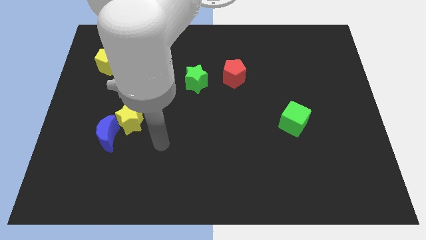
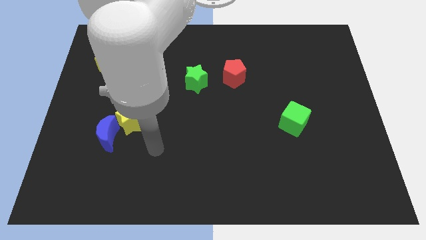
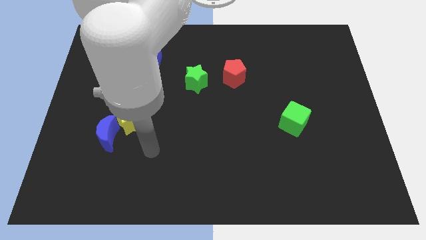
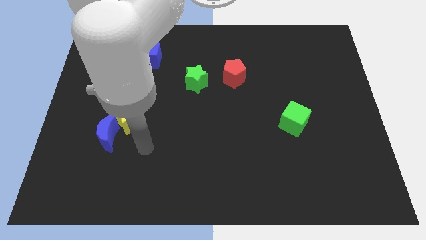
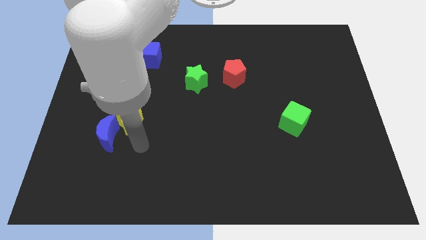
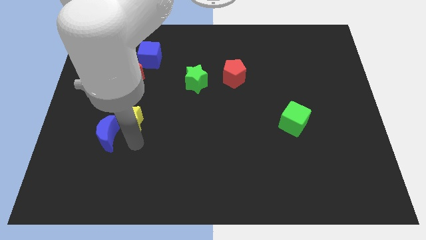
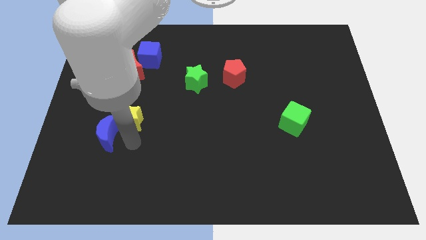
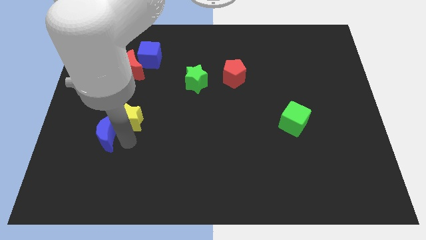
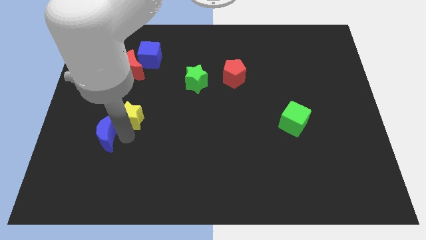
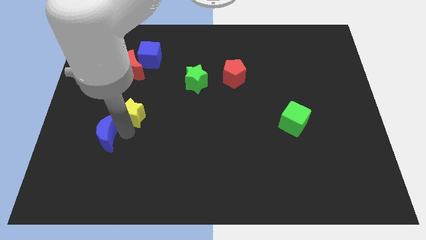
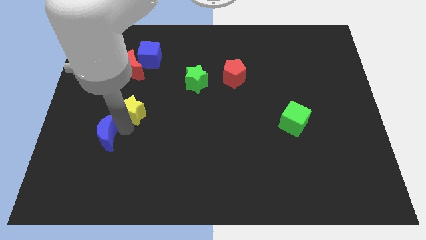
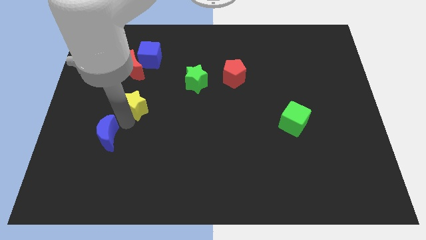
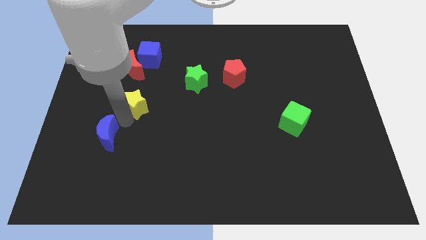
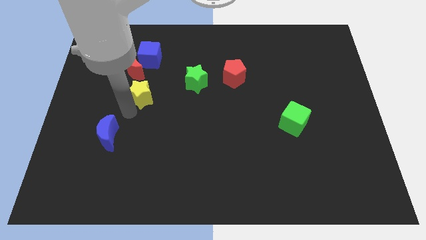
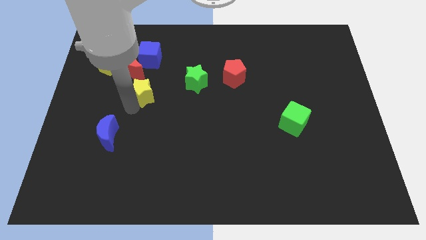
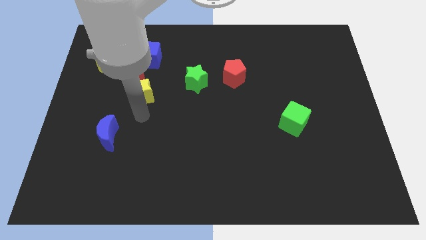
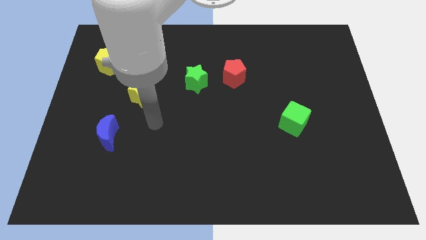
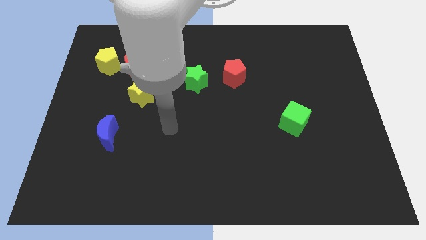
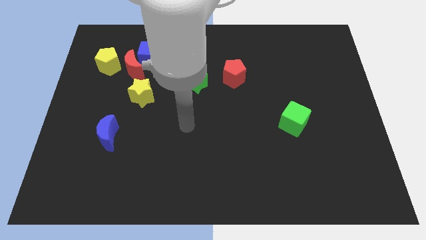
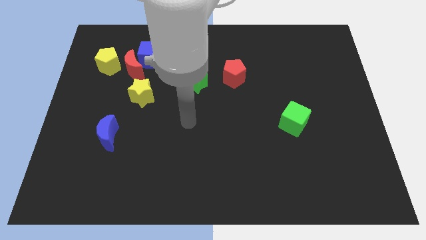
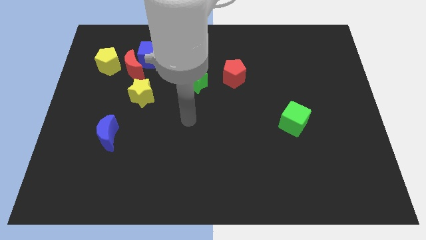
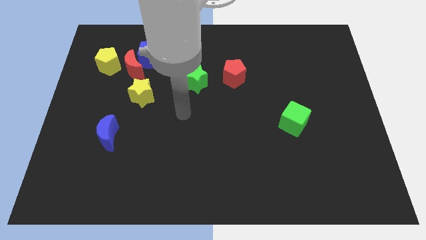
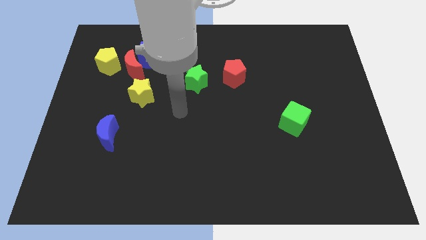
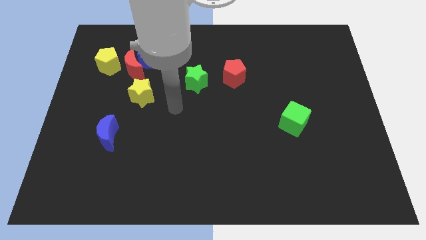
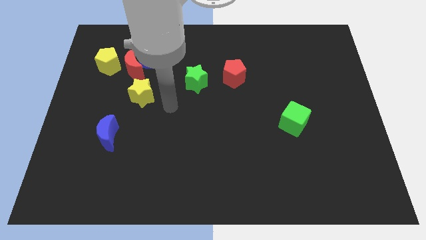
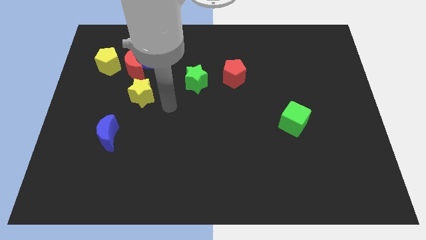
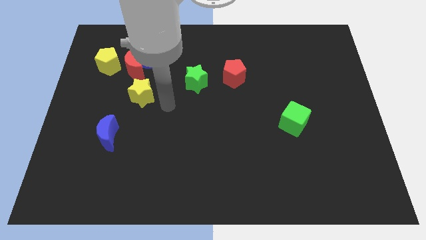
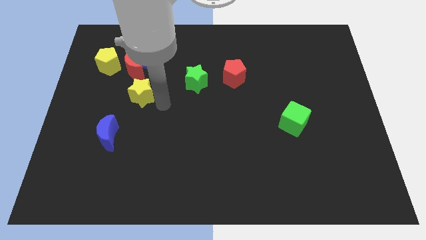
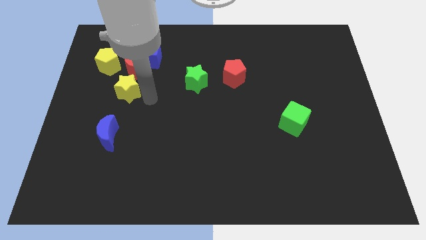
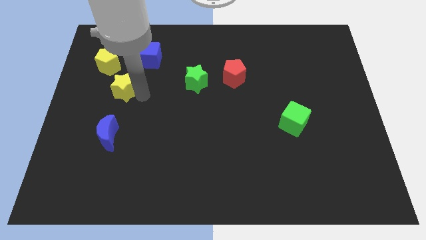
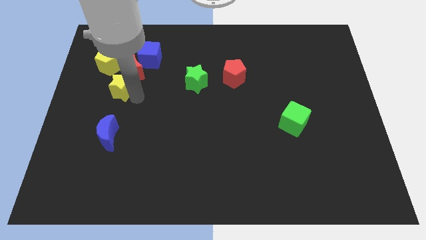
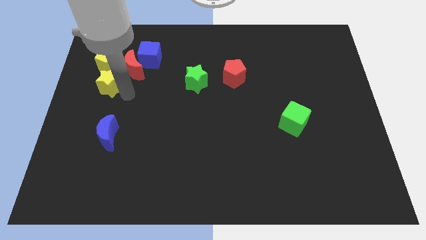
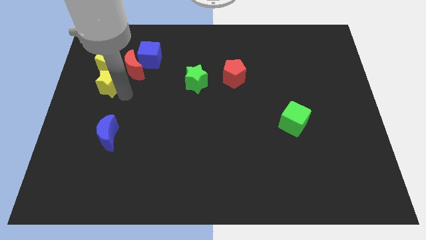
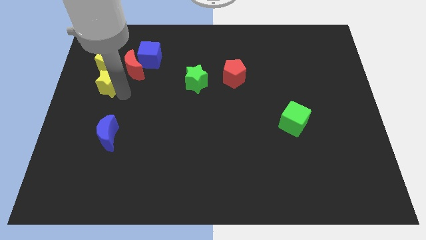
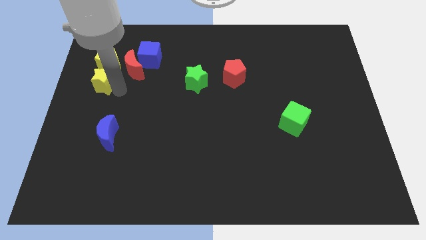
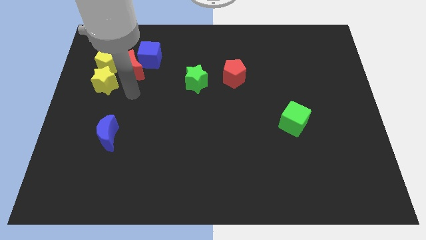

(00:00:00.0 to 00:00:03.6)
move the yellow star below into the yellow pentagon

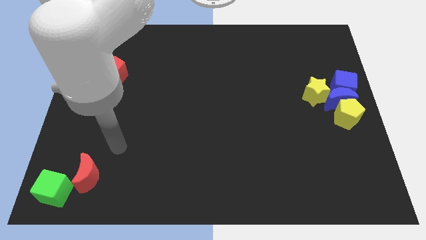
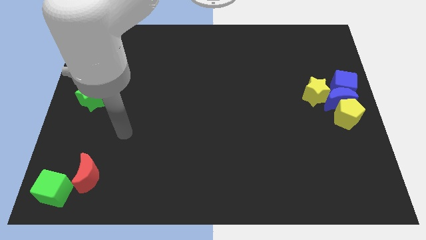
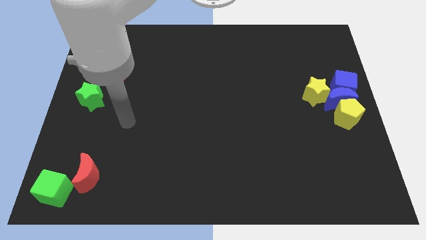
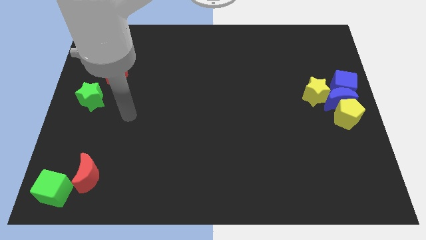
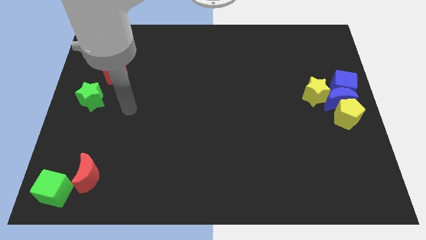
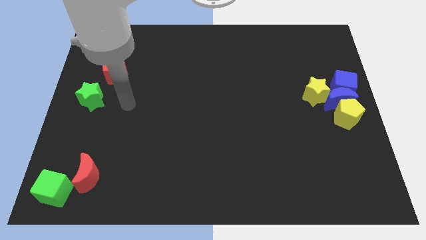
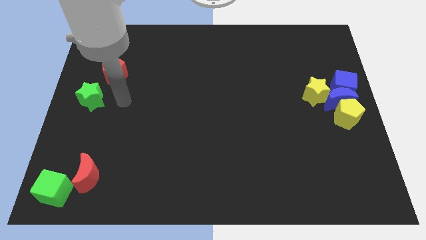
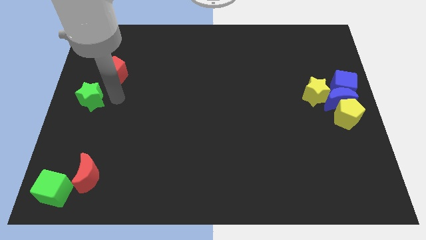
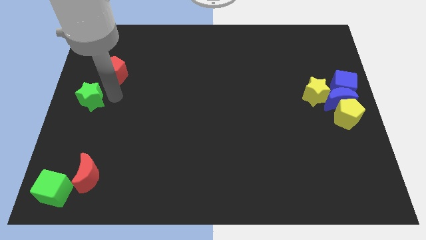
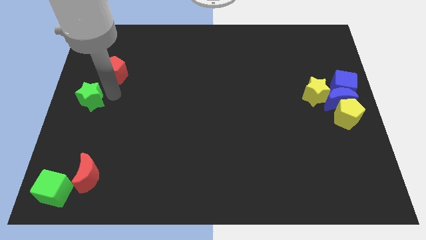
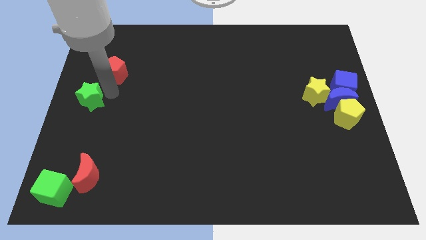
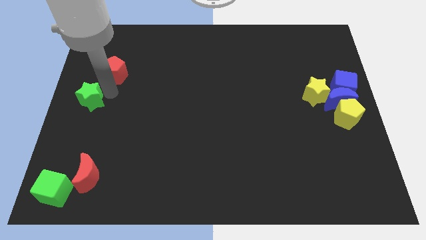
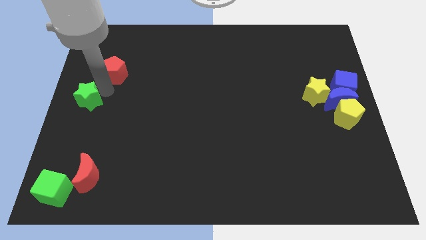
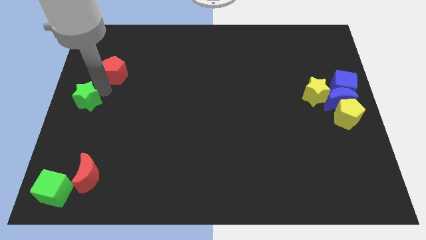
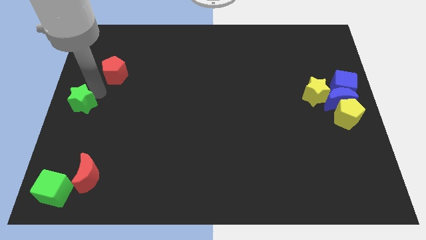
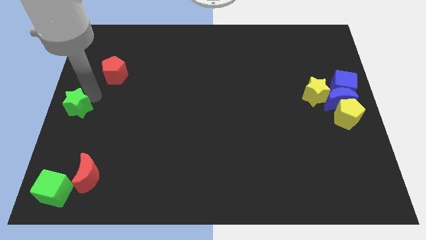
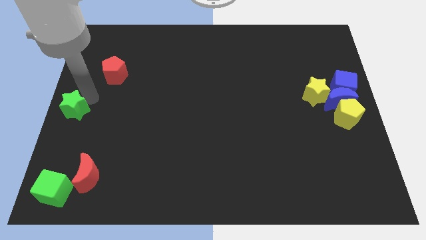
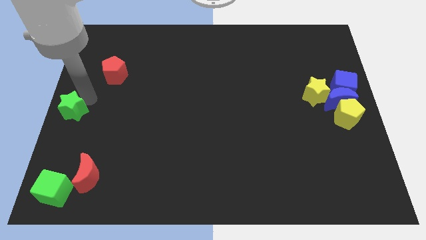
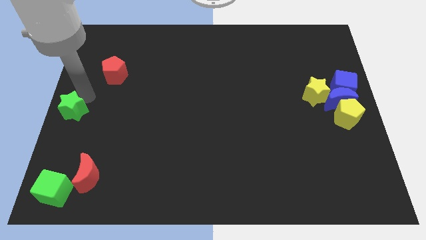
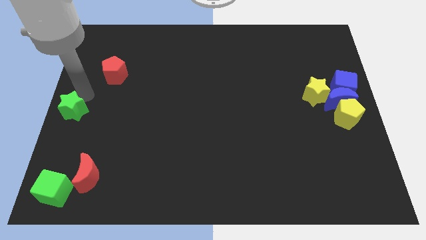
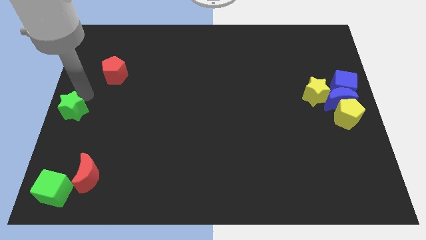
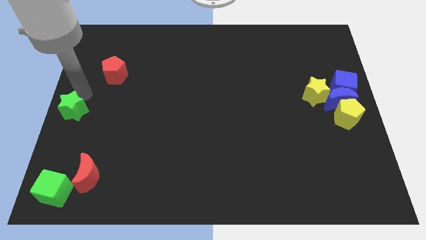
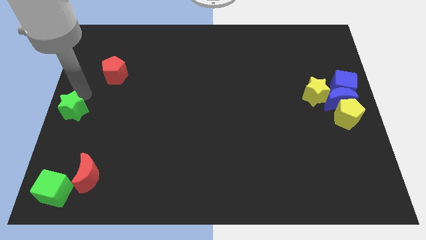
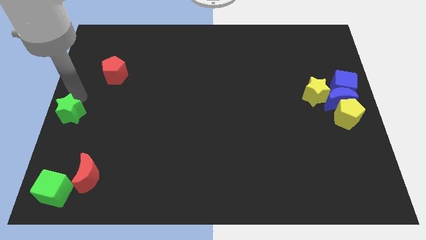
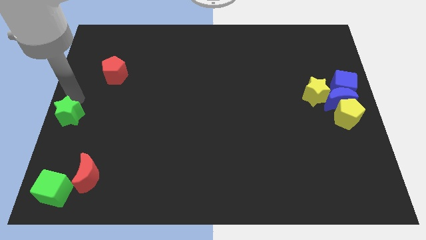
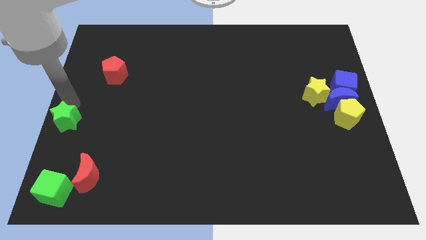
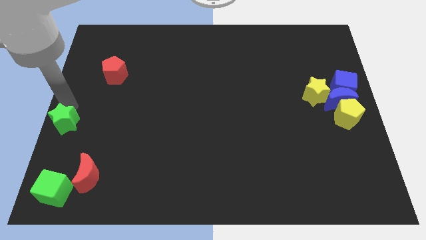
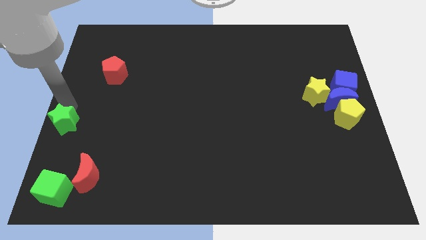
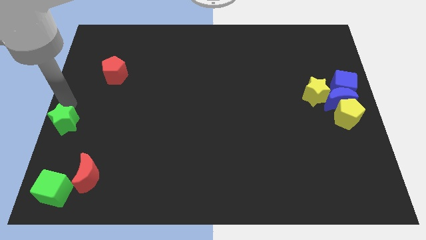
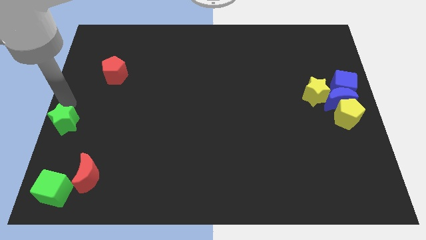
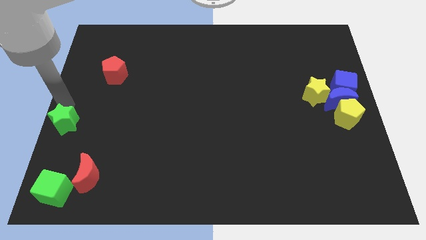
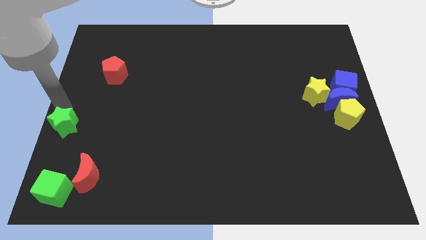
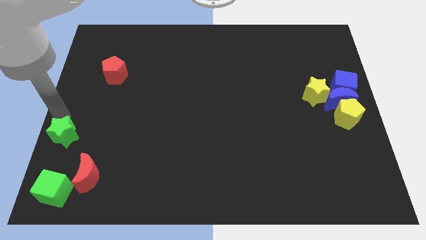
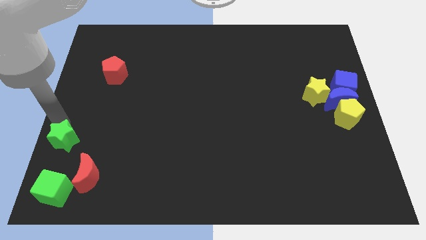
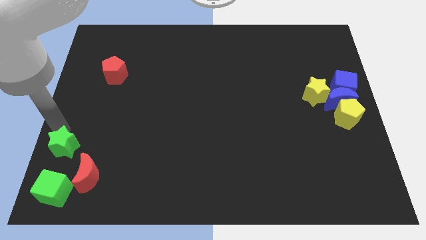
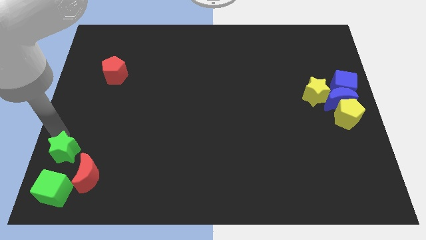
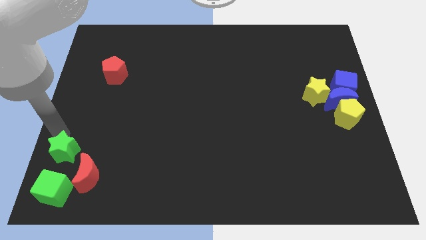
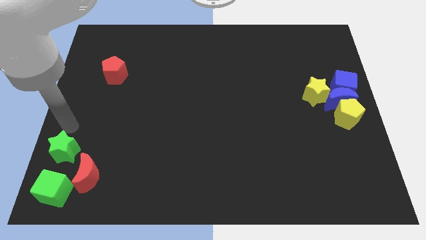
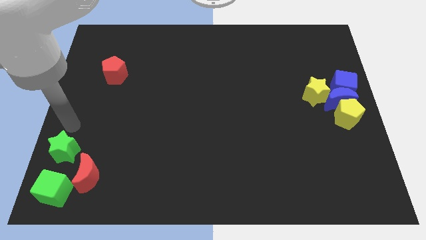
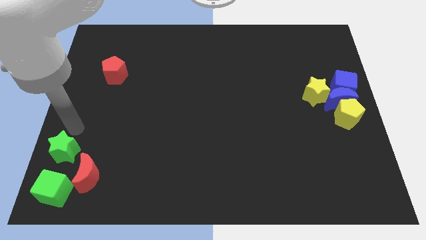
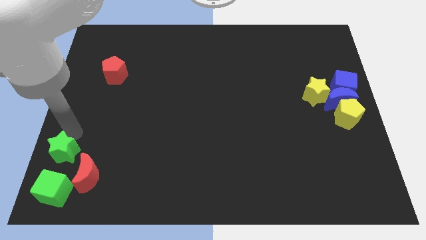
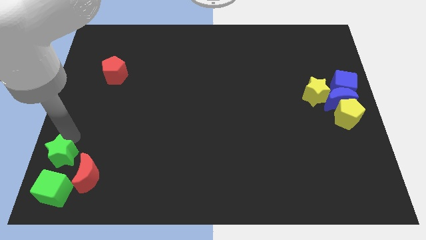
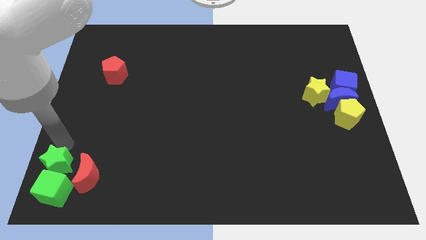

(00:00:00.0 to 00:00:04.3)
push green star above green cube

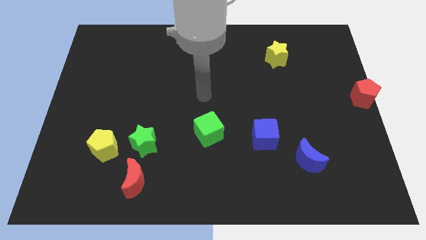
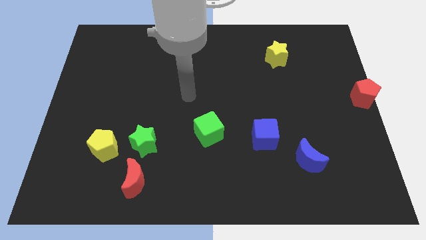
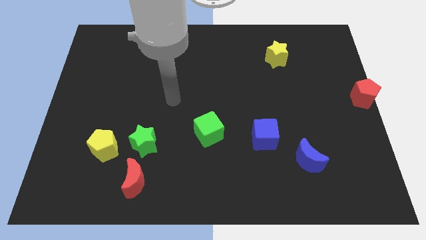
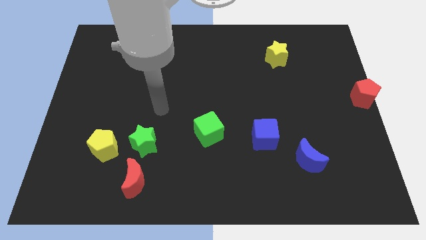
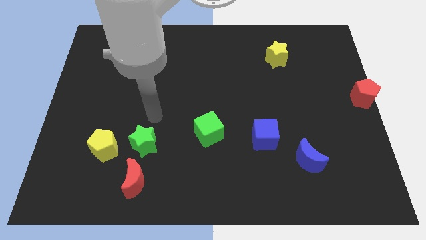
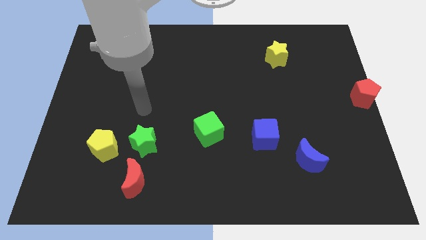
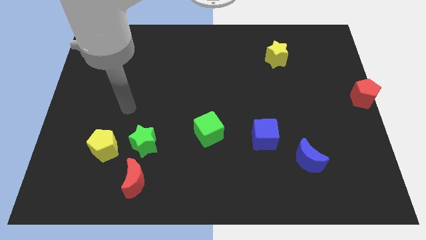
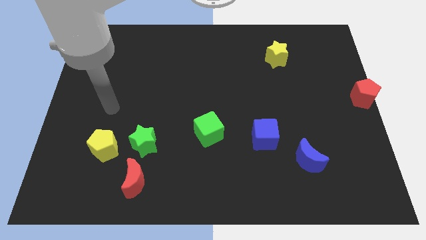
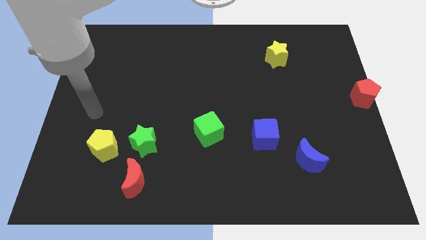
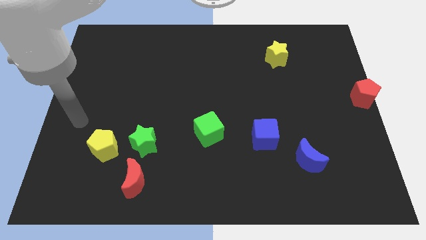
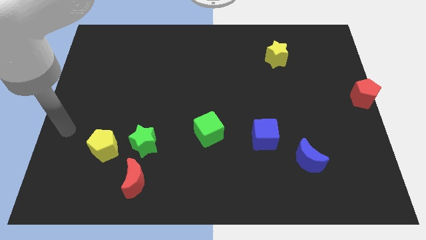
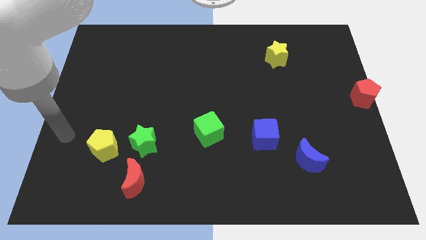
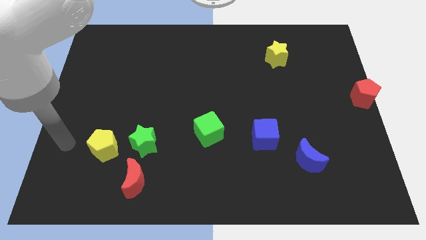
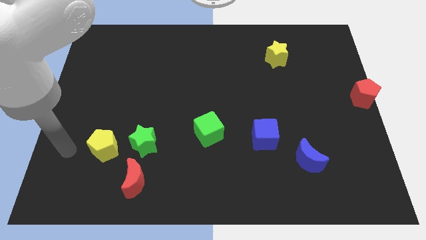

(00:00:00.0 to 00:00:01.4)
point your arm at the left of the yellow pentagon
